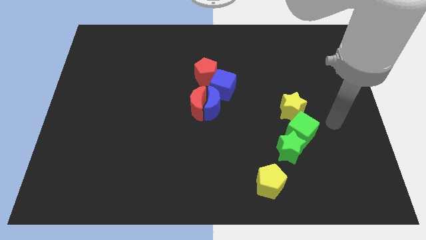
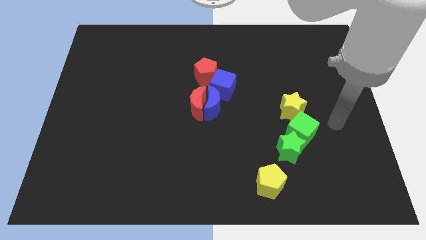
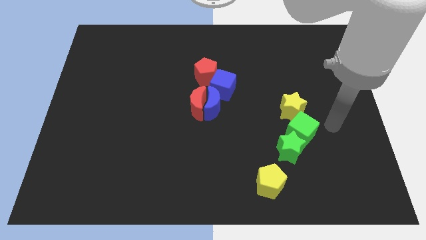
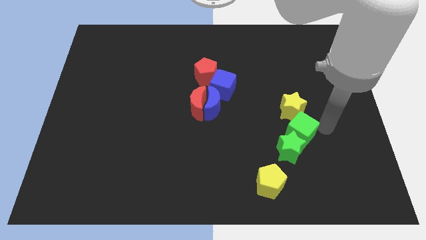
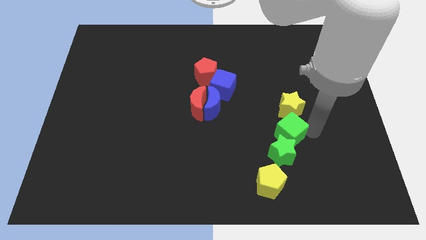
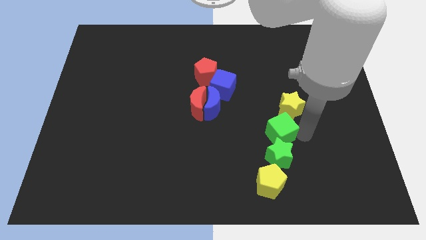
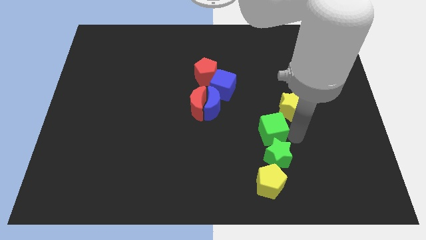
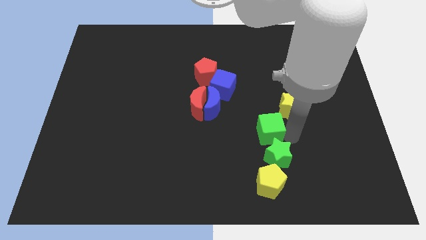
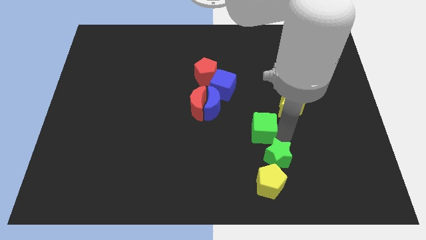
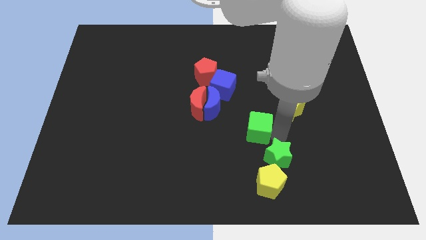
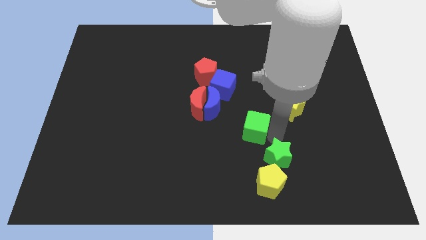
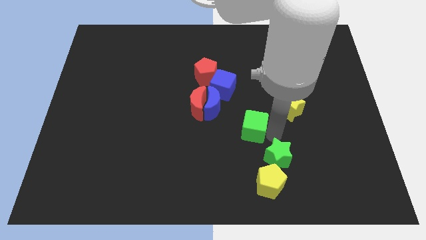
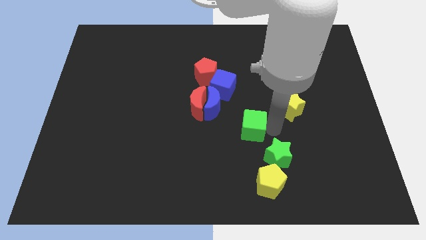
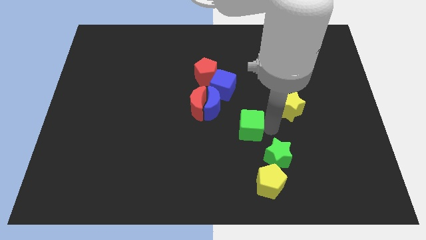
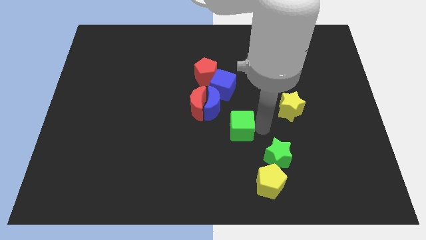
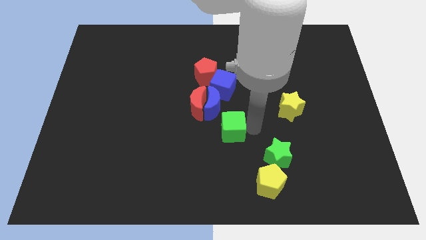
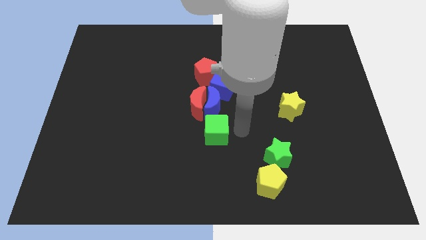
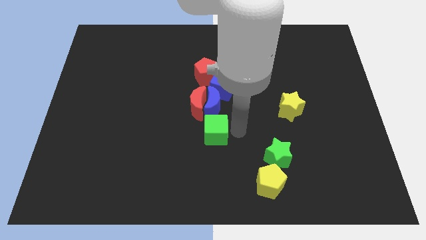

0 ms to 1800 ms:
place the green cube below the blue crescent

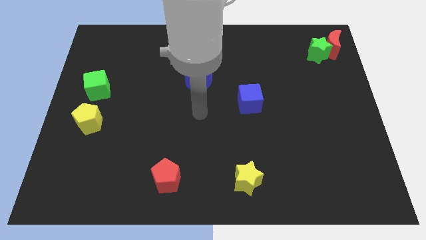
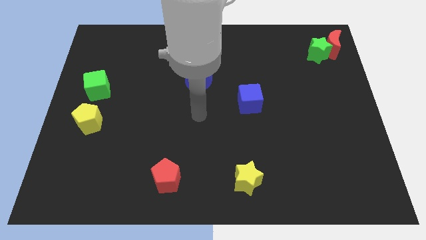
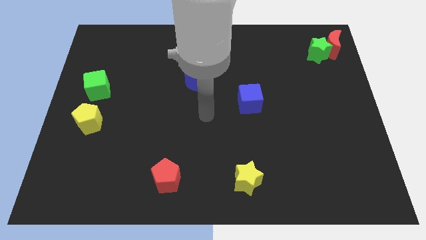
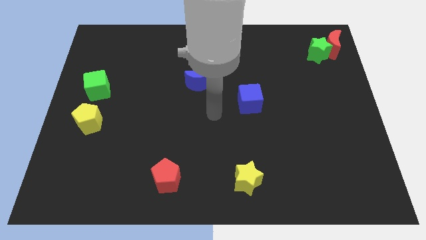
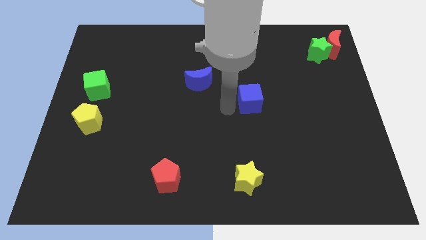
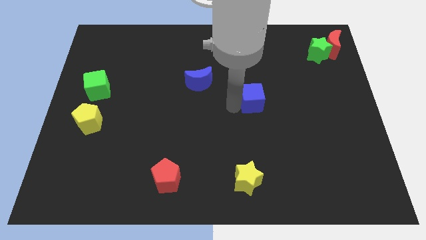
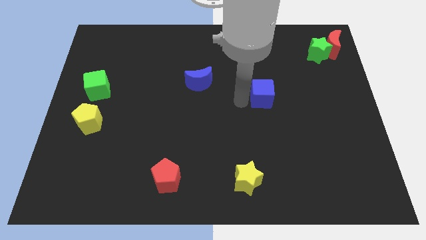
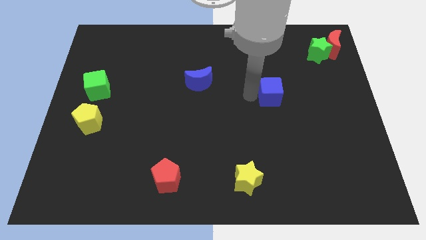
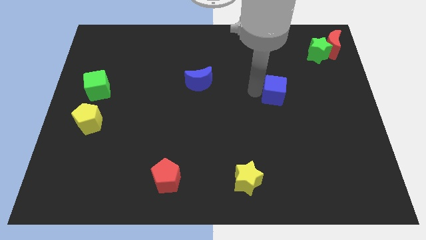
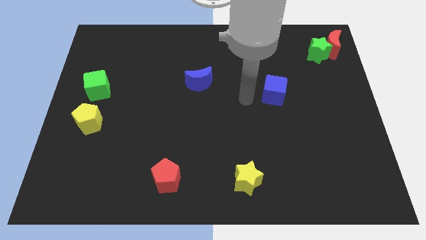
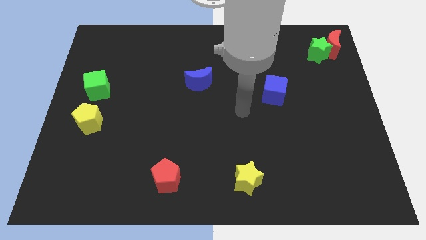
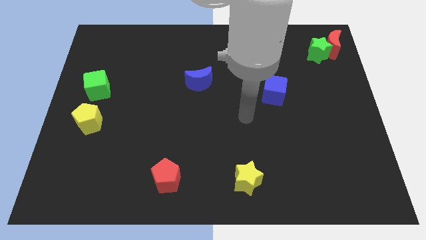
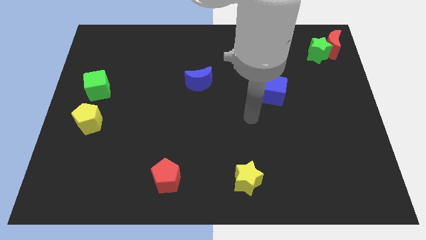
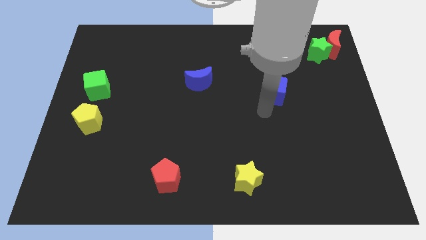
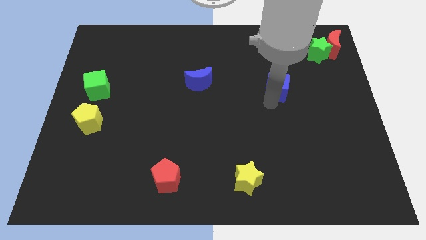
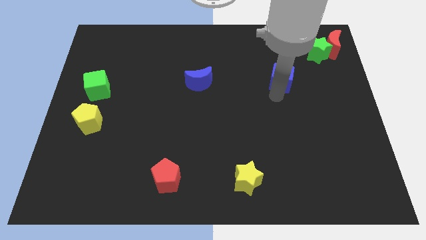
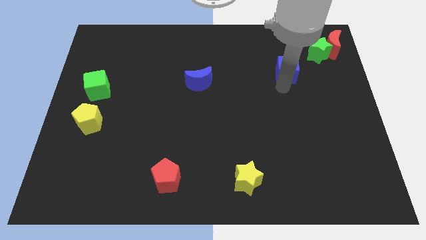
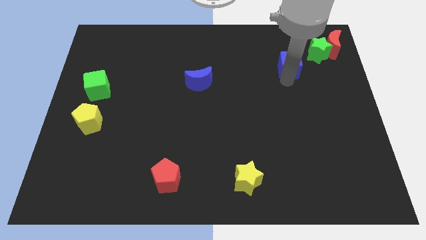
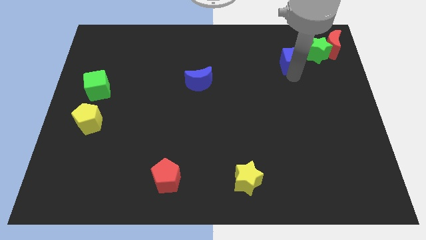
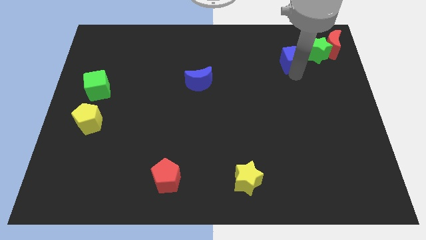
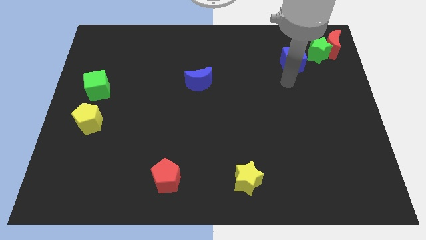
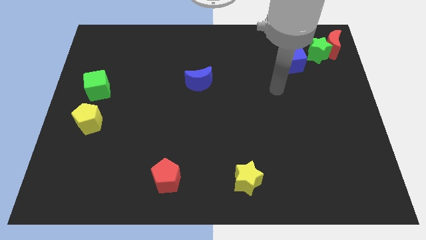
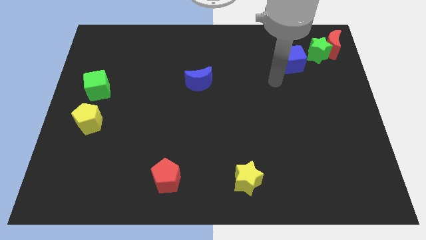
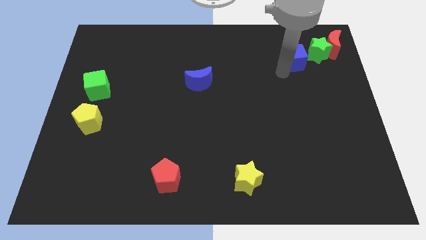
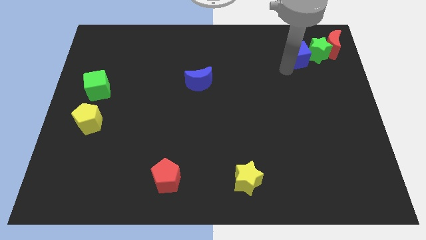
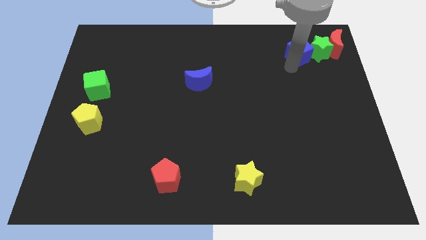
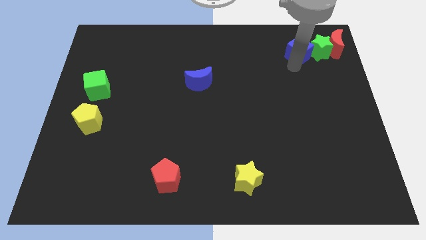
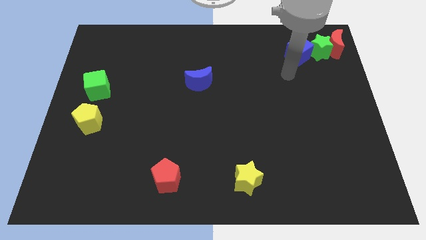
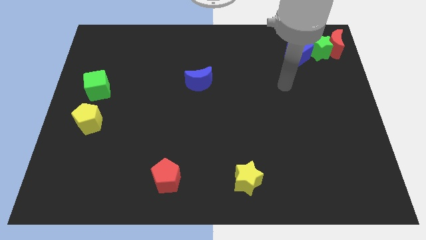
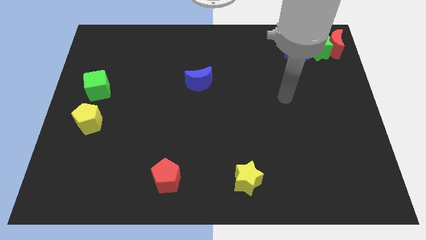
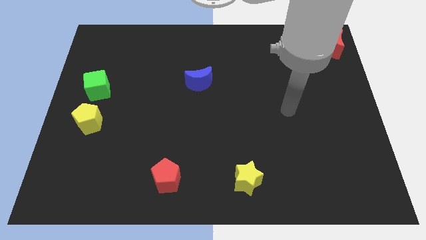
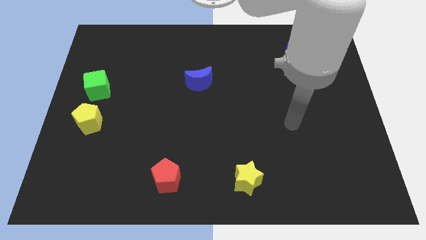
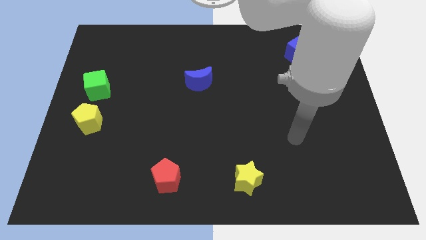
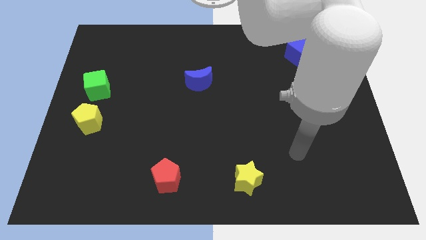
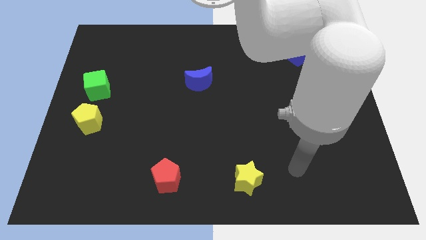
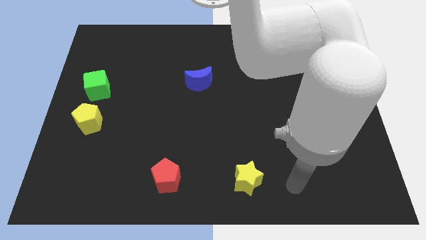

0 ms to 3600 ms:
push the blue cube to the top right corner of the board

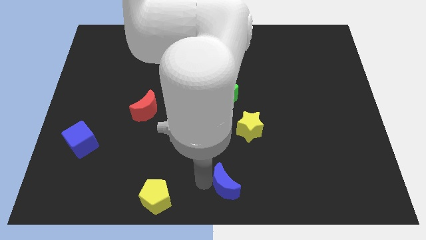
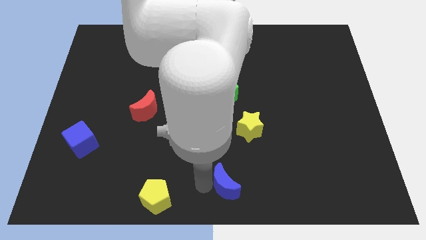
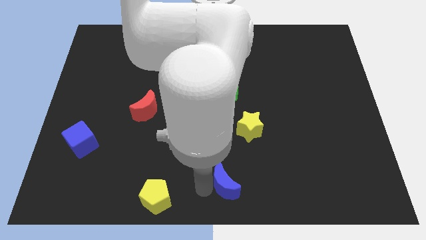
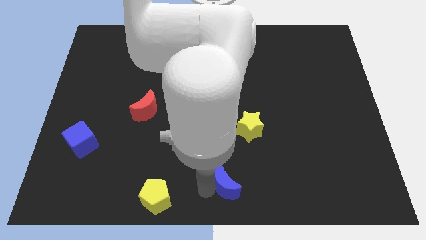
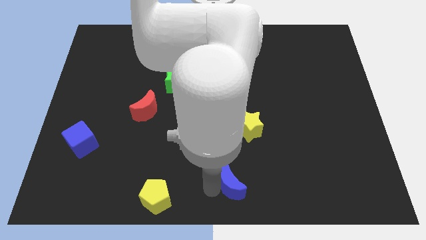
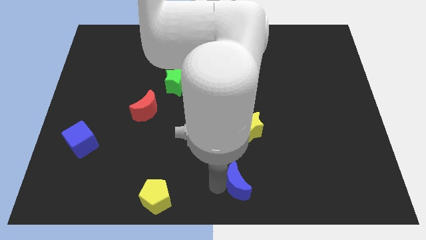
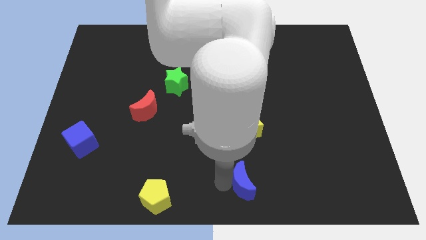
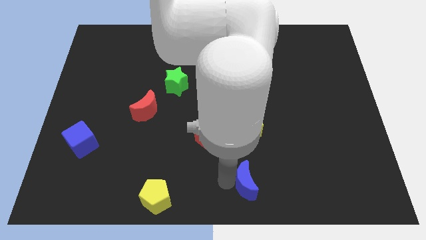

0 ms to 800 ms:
place blue crescent below yellow star

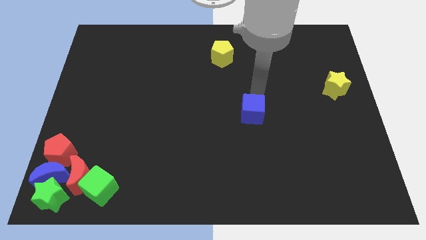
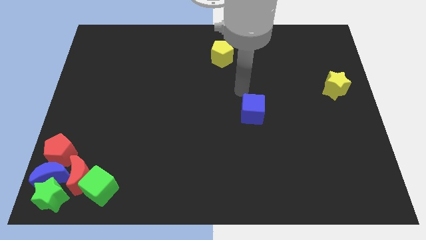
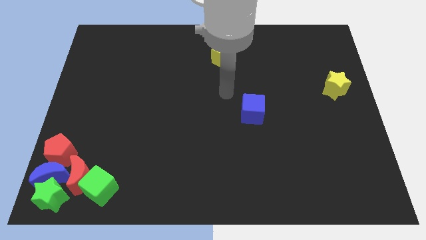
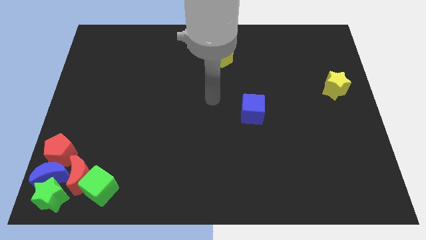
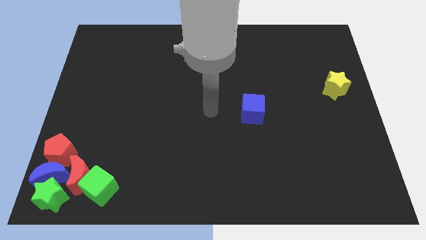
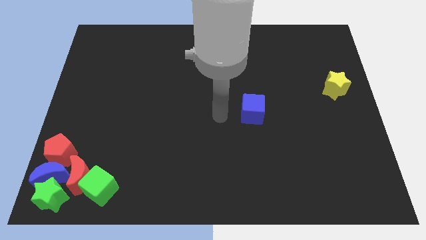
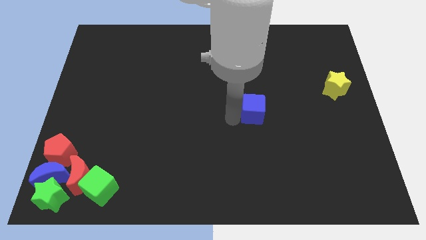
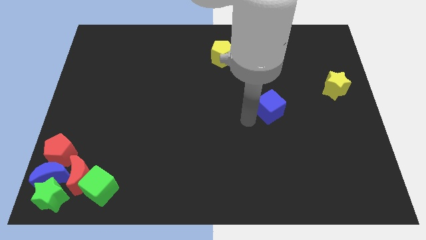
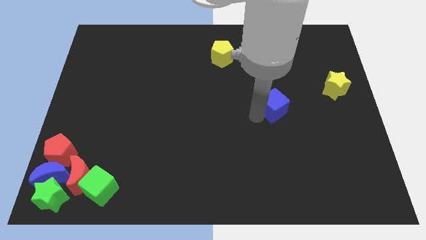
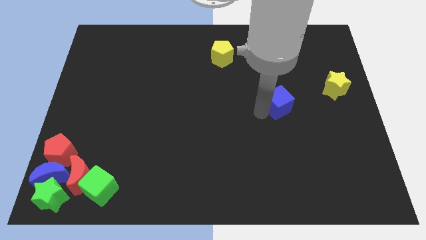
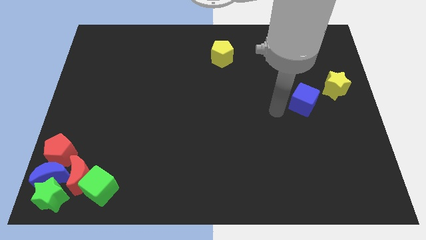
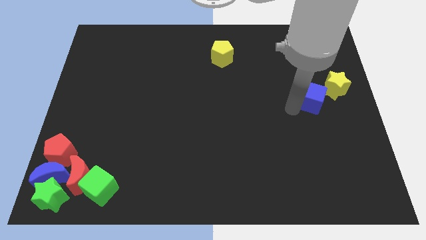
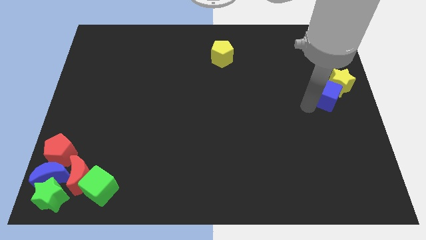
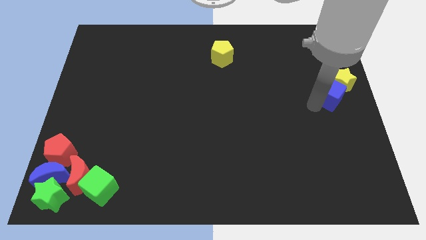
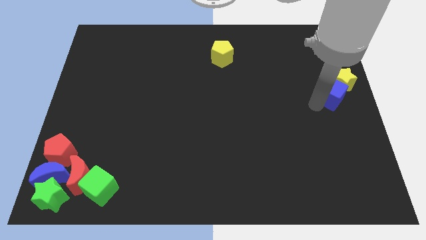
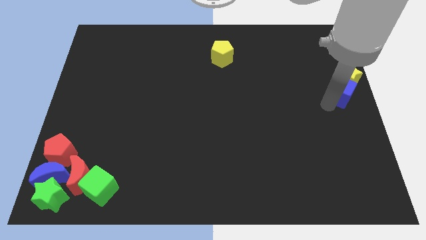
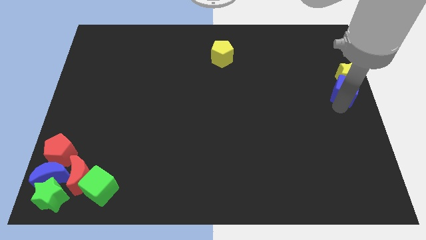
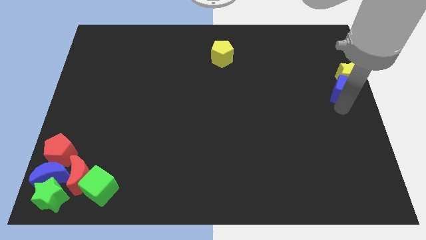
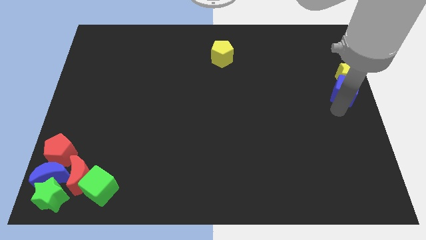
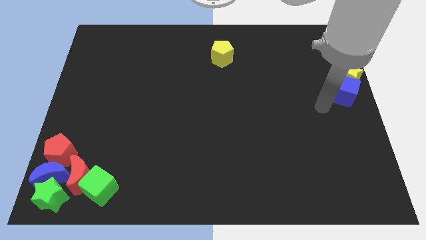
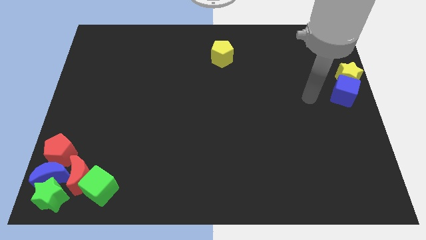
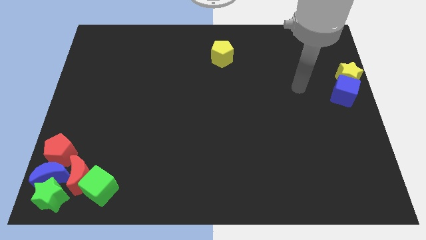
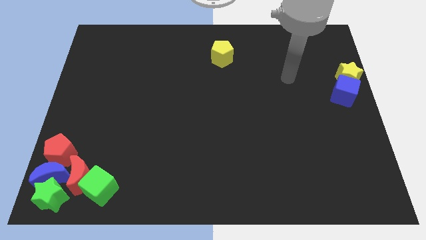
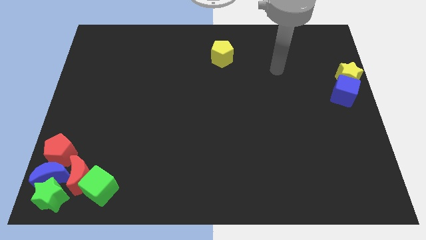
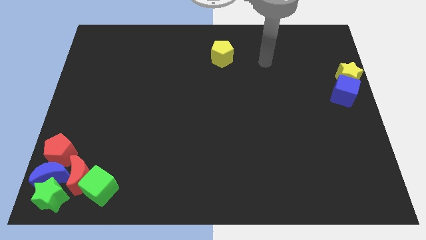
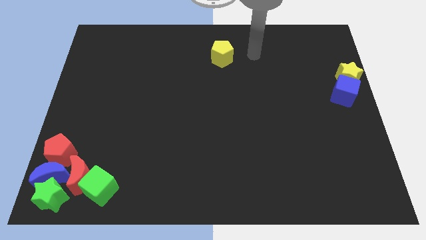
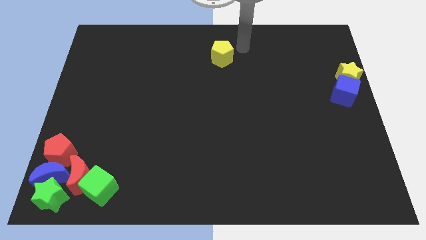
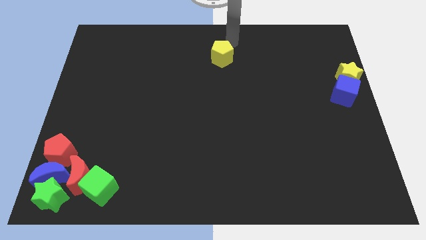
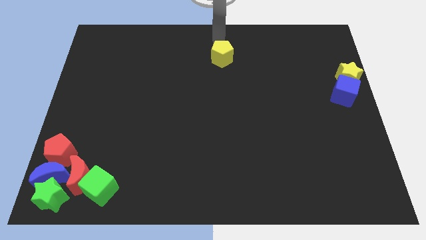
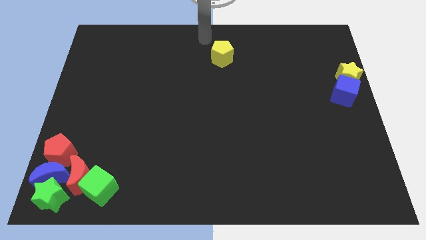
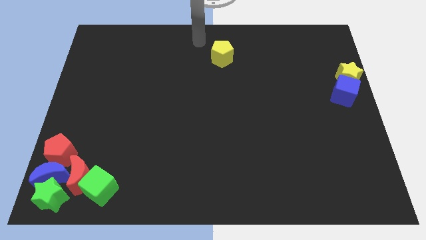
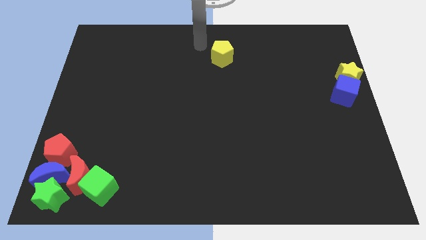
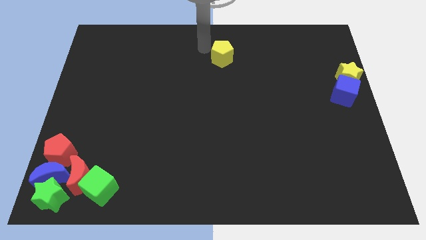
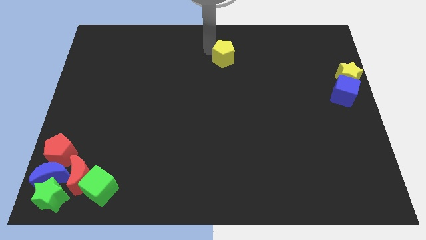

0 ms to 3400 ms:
point your arm above yellow pentagon
